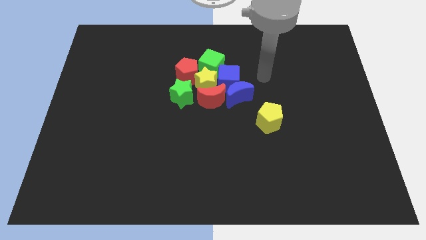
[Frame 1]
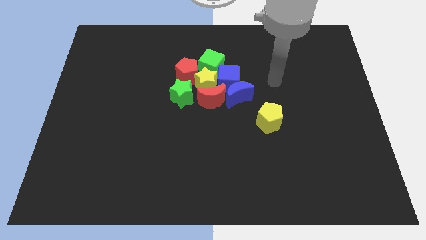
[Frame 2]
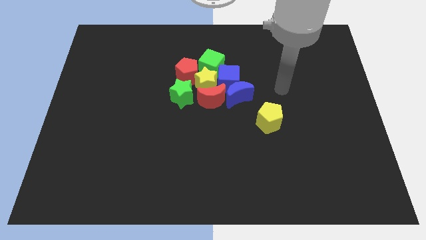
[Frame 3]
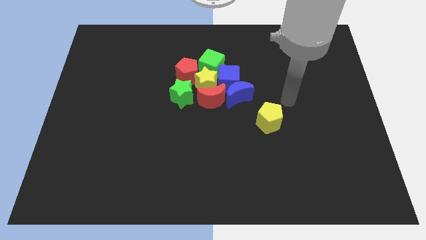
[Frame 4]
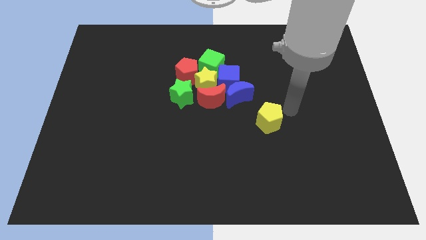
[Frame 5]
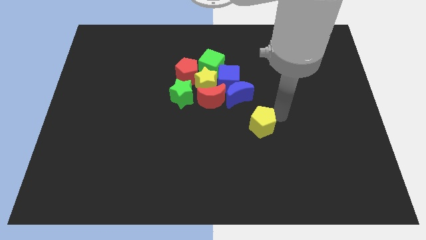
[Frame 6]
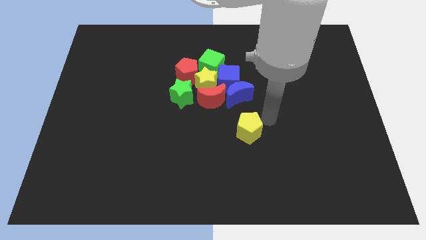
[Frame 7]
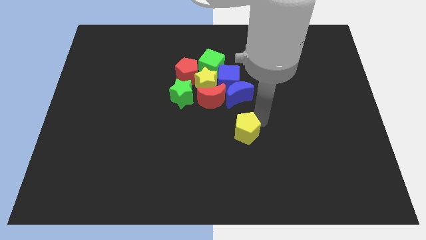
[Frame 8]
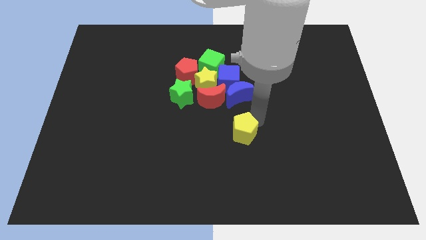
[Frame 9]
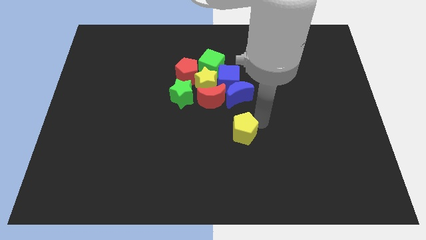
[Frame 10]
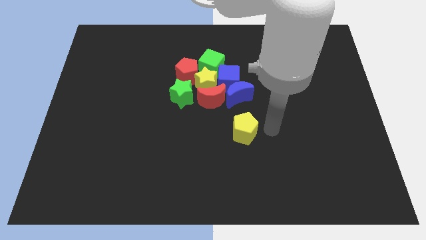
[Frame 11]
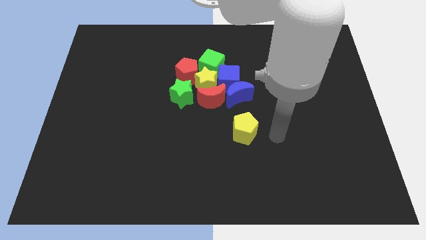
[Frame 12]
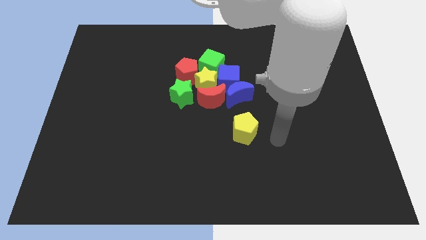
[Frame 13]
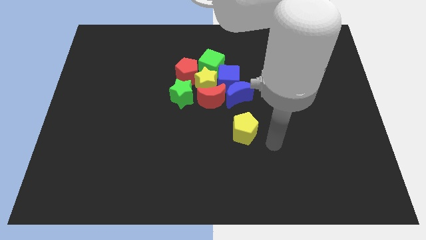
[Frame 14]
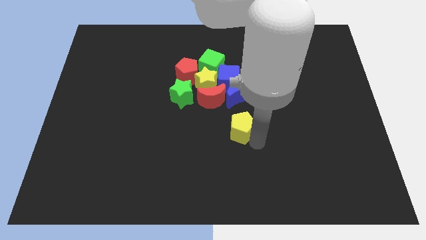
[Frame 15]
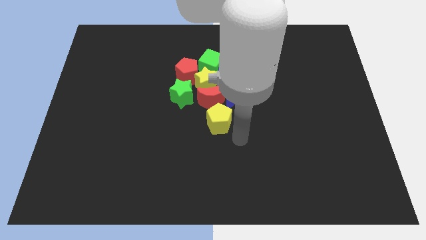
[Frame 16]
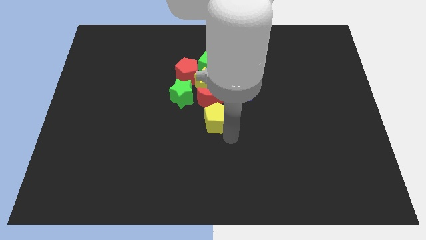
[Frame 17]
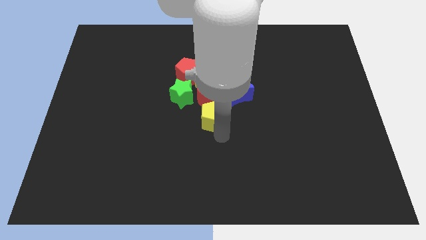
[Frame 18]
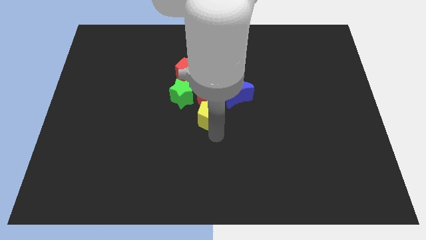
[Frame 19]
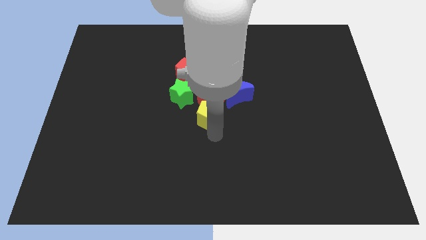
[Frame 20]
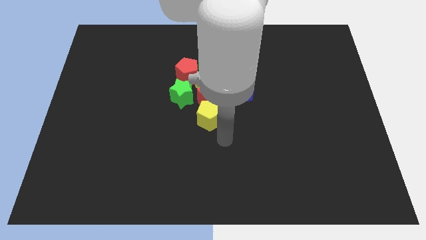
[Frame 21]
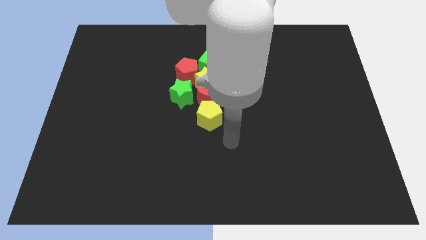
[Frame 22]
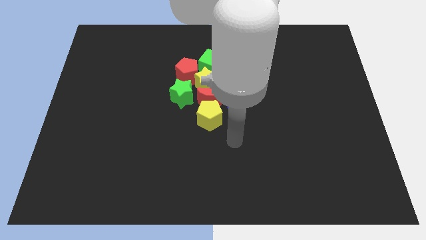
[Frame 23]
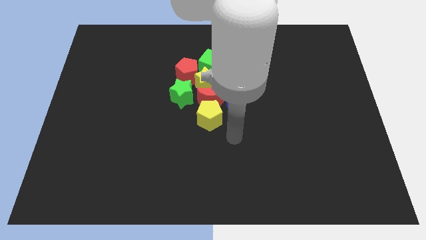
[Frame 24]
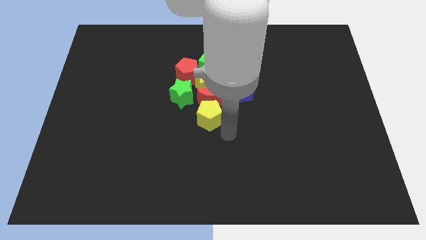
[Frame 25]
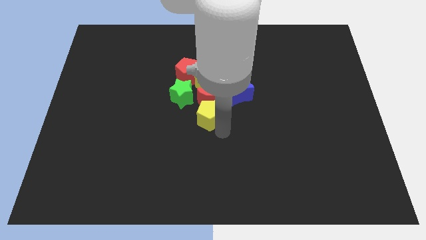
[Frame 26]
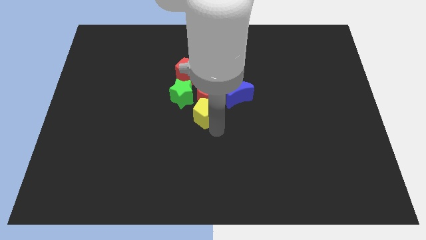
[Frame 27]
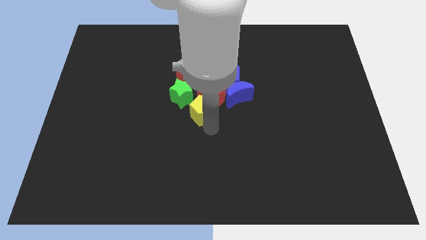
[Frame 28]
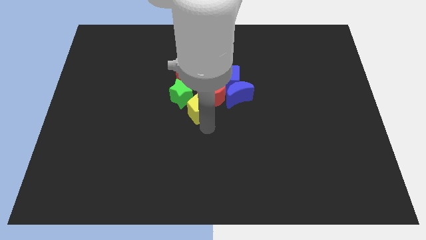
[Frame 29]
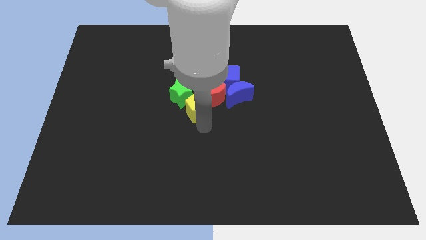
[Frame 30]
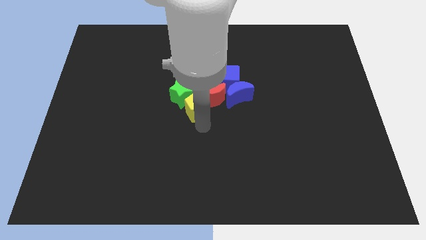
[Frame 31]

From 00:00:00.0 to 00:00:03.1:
push yellow pentagon towards green star

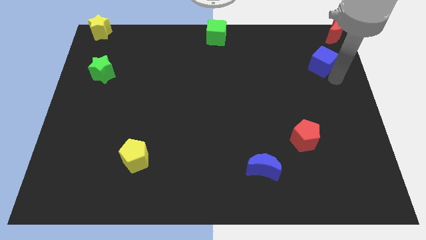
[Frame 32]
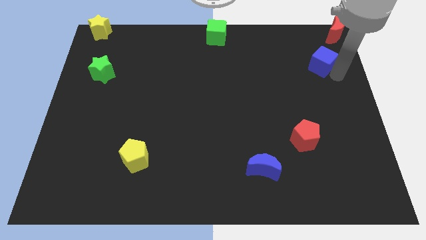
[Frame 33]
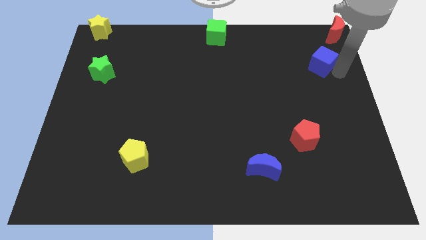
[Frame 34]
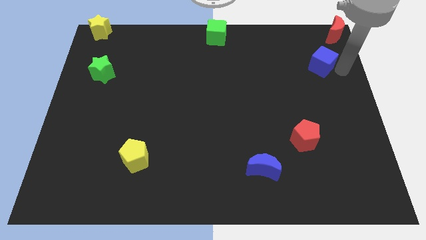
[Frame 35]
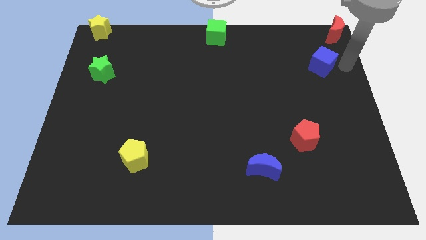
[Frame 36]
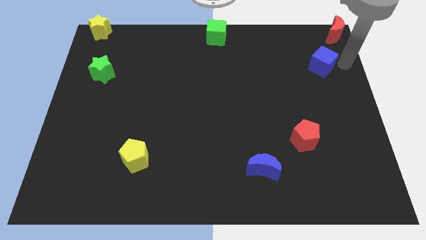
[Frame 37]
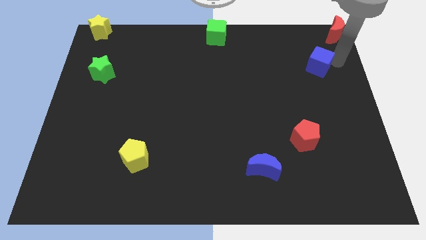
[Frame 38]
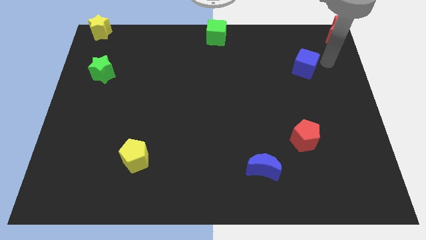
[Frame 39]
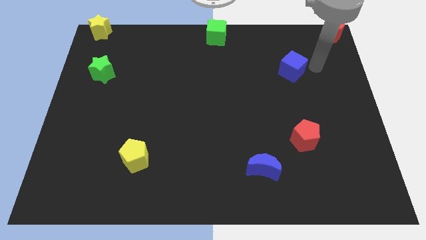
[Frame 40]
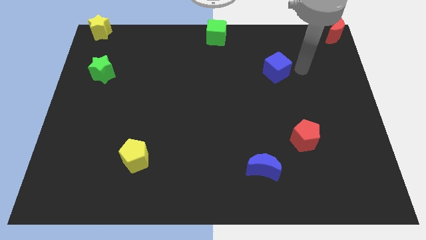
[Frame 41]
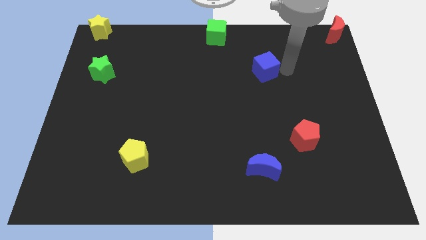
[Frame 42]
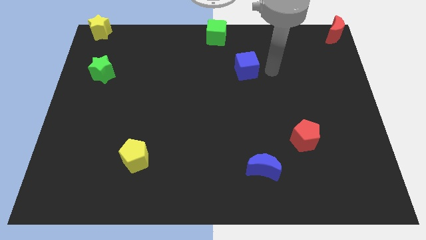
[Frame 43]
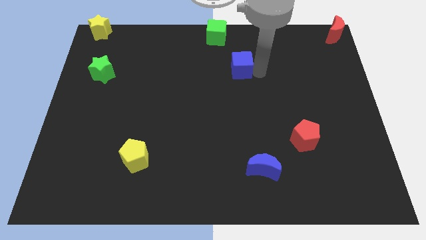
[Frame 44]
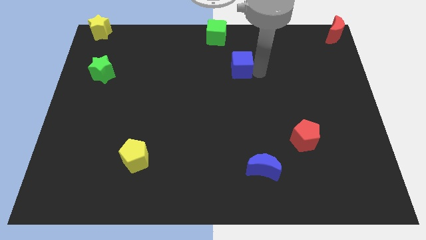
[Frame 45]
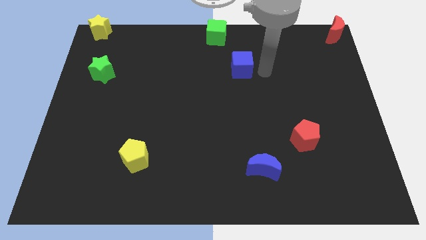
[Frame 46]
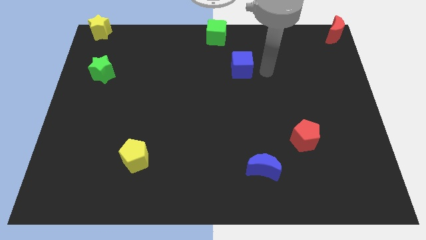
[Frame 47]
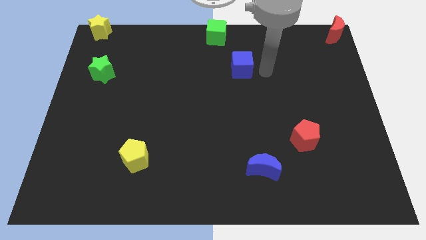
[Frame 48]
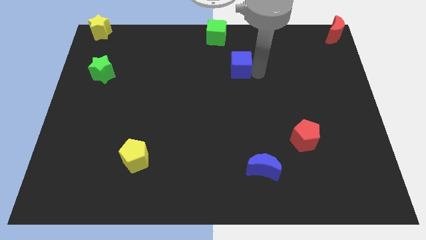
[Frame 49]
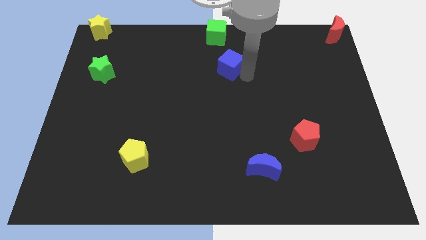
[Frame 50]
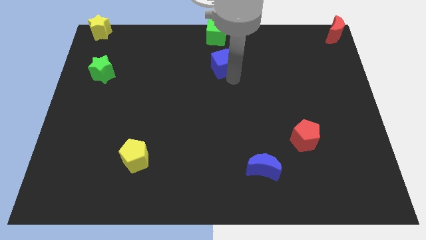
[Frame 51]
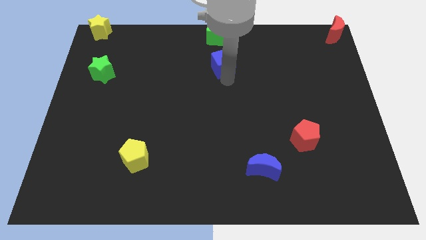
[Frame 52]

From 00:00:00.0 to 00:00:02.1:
move the blue cube to the bottom of the green cube

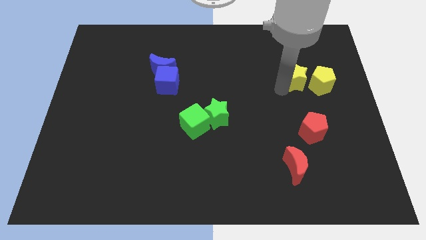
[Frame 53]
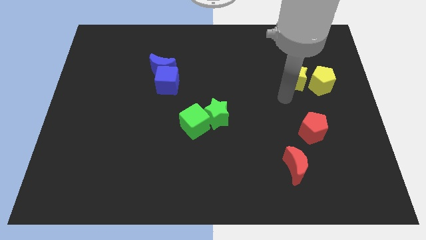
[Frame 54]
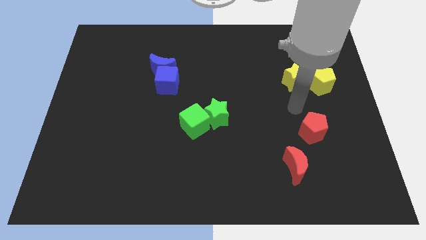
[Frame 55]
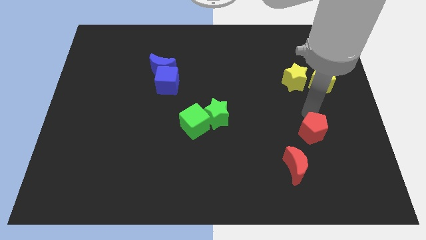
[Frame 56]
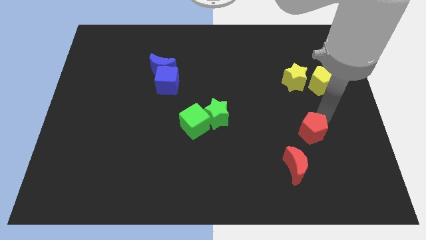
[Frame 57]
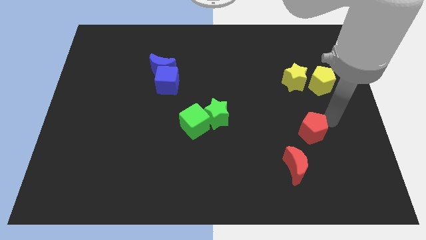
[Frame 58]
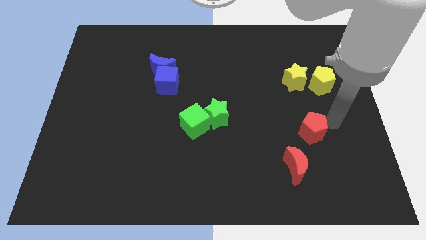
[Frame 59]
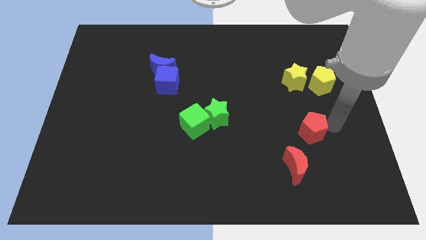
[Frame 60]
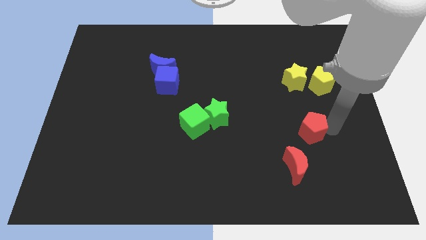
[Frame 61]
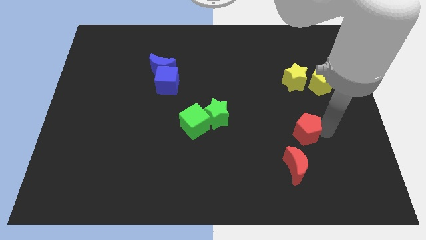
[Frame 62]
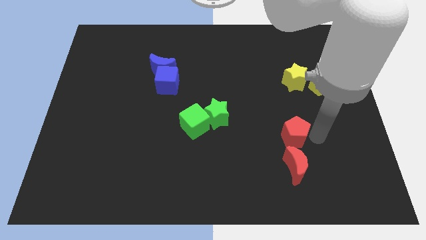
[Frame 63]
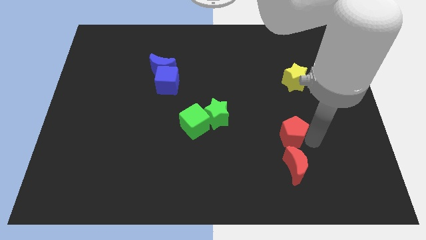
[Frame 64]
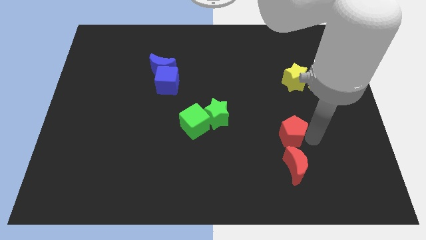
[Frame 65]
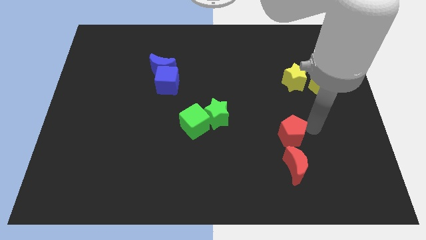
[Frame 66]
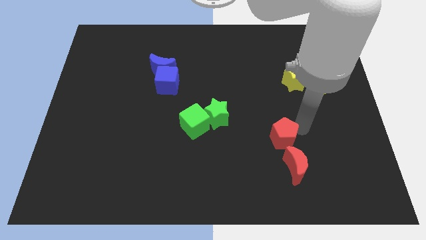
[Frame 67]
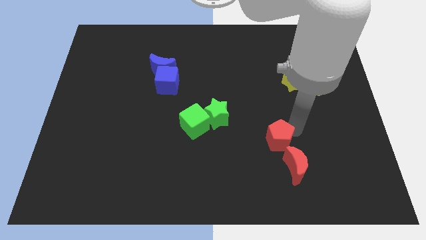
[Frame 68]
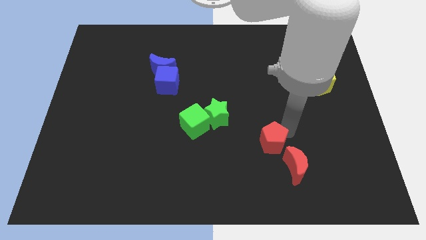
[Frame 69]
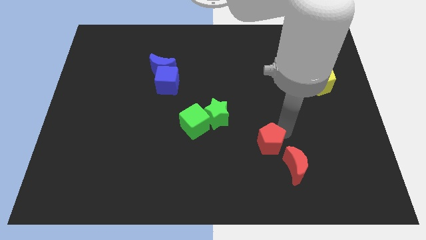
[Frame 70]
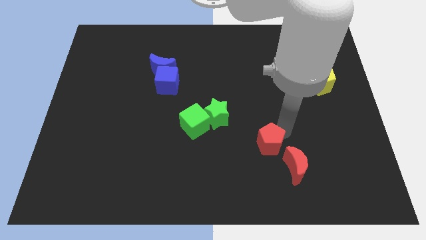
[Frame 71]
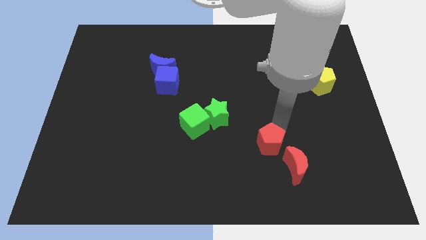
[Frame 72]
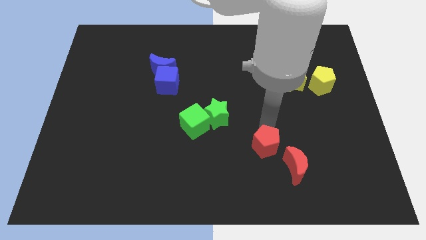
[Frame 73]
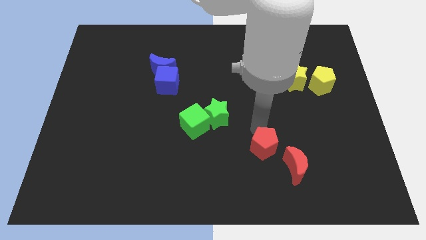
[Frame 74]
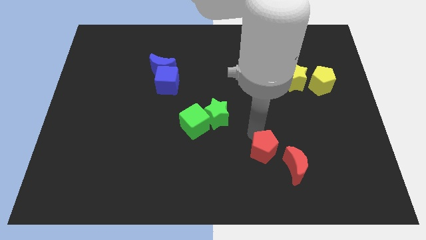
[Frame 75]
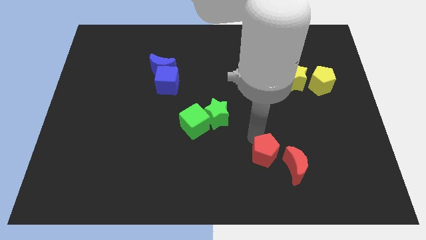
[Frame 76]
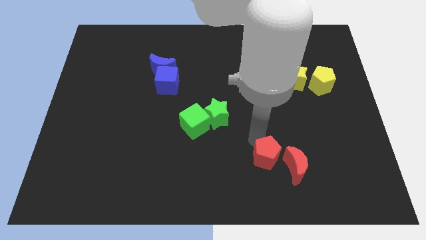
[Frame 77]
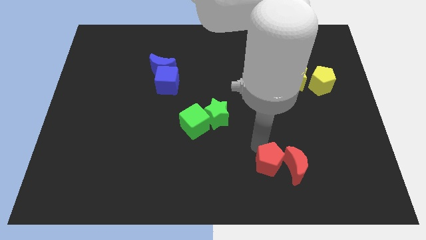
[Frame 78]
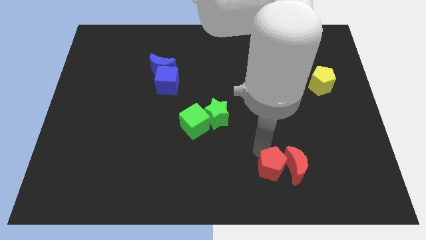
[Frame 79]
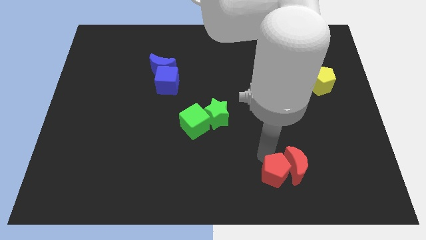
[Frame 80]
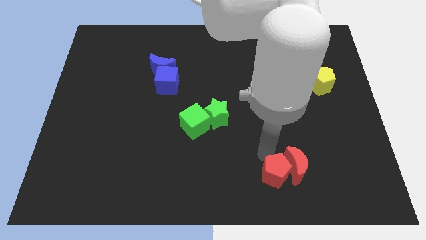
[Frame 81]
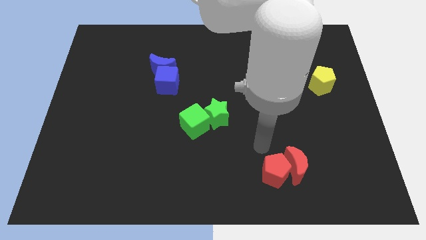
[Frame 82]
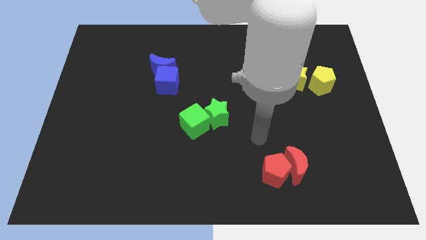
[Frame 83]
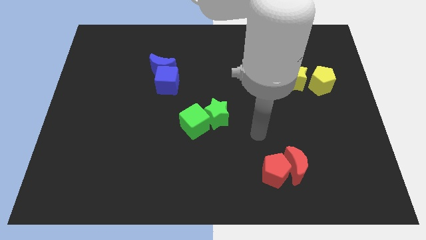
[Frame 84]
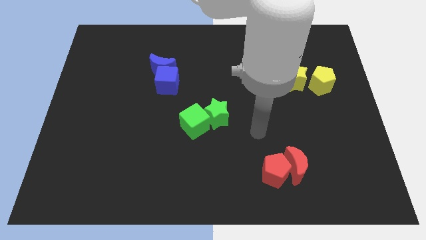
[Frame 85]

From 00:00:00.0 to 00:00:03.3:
place the red pentagon to the left of the red moon

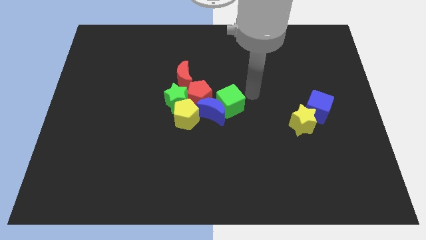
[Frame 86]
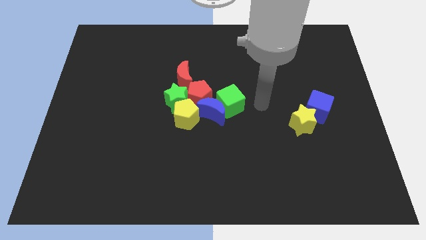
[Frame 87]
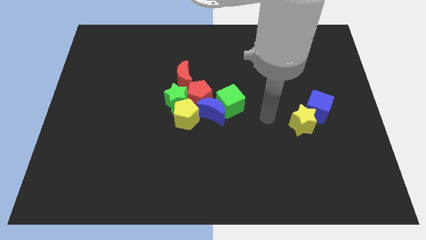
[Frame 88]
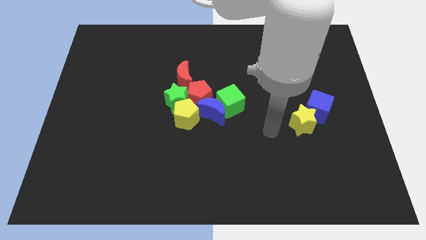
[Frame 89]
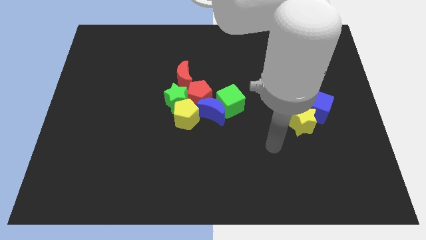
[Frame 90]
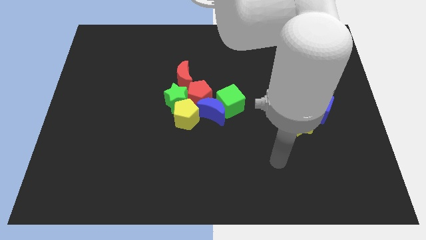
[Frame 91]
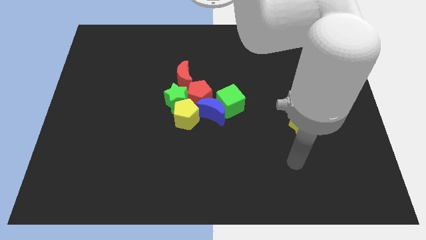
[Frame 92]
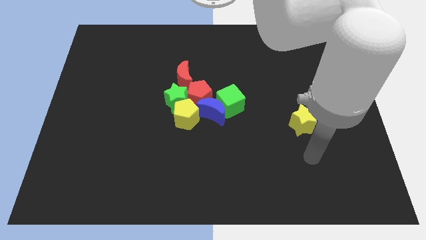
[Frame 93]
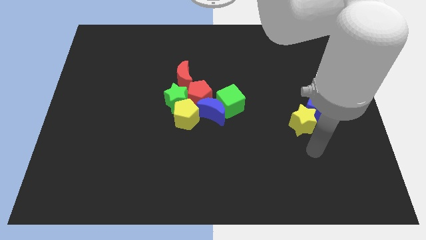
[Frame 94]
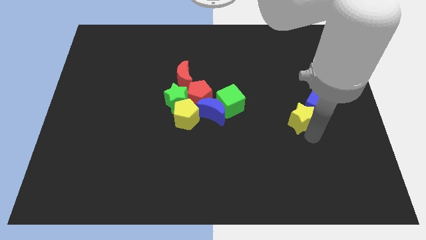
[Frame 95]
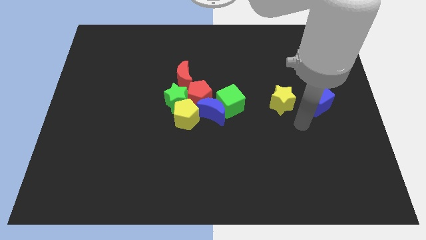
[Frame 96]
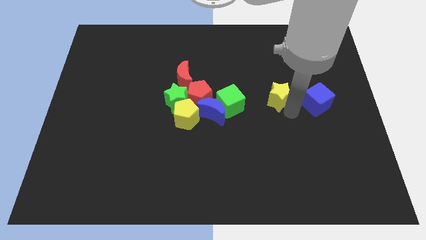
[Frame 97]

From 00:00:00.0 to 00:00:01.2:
move the yellow star to the left side of the blue cube
